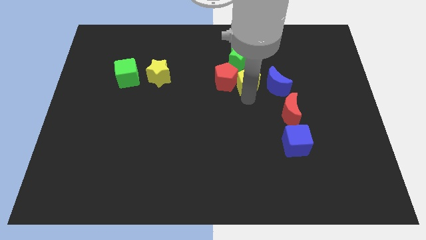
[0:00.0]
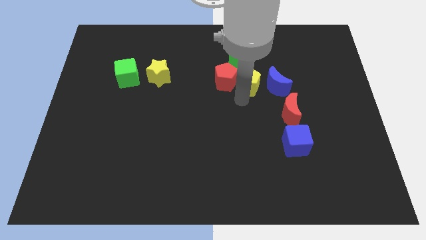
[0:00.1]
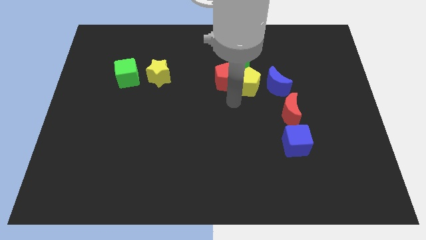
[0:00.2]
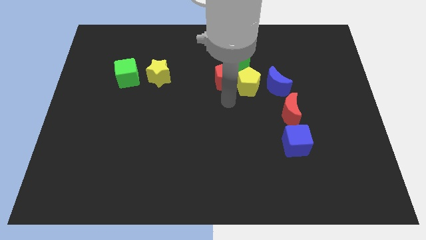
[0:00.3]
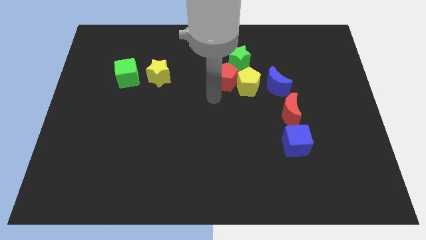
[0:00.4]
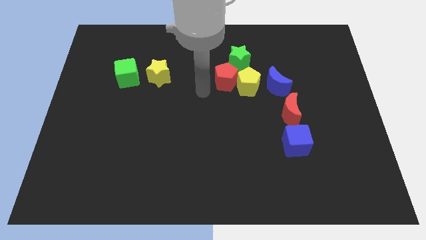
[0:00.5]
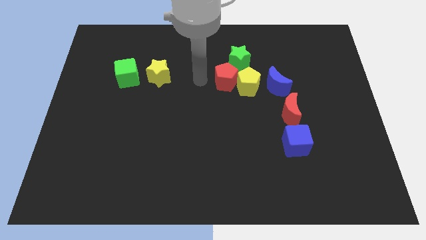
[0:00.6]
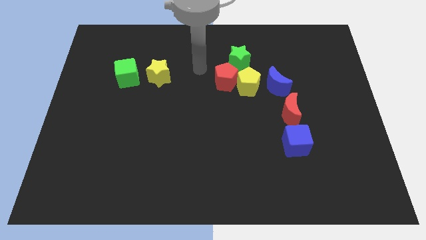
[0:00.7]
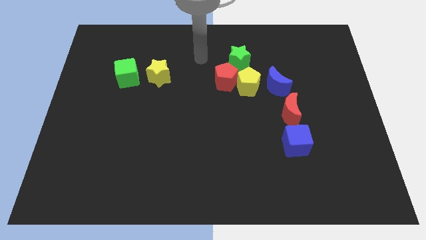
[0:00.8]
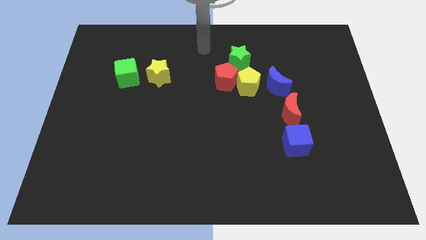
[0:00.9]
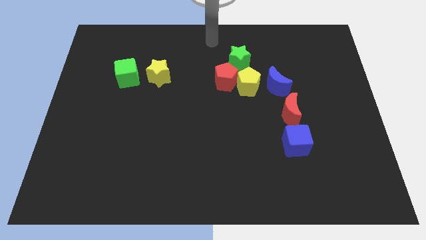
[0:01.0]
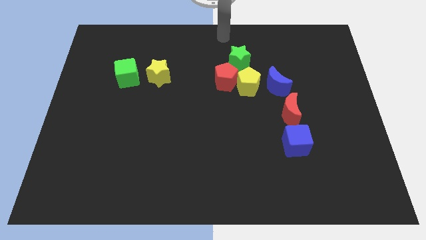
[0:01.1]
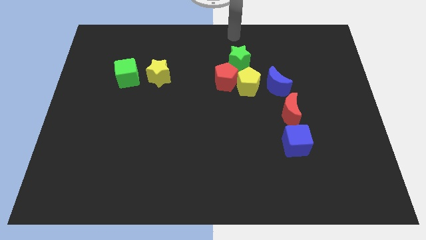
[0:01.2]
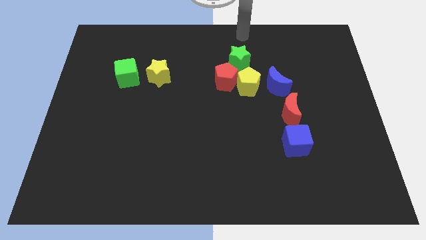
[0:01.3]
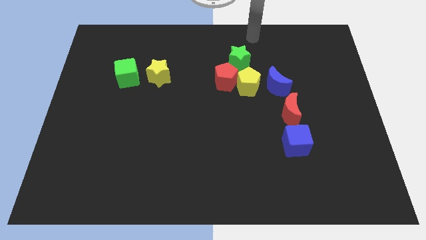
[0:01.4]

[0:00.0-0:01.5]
move the yellow pentagon and red penatgon close to green star

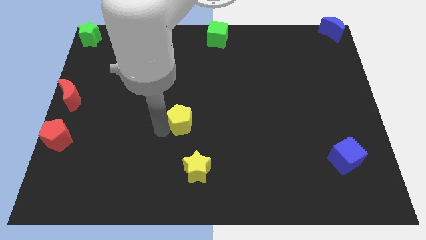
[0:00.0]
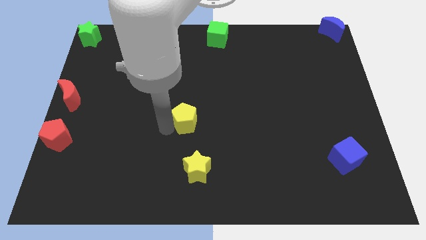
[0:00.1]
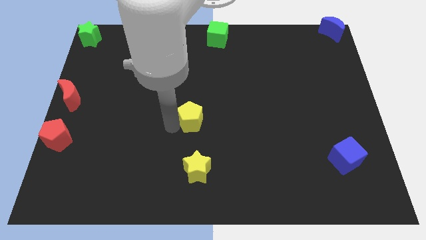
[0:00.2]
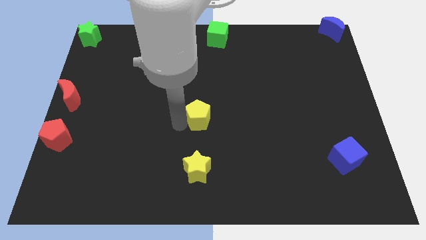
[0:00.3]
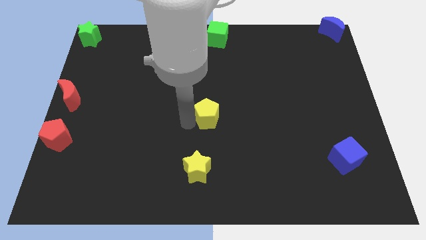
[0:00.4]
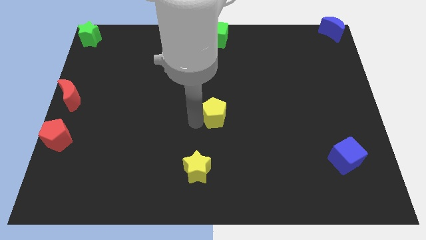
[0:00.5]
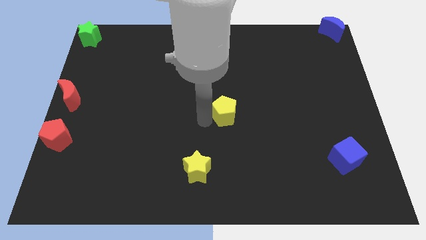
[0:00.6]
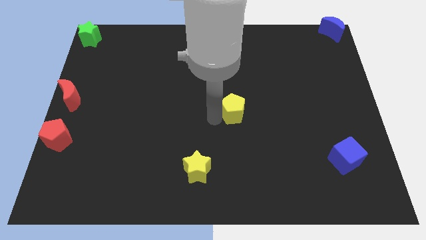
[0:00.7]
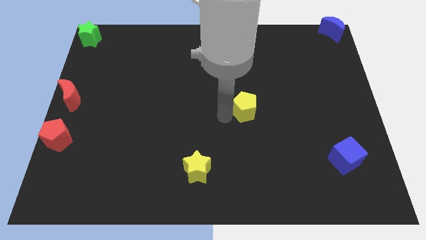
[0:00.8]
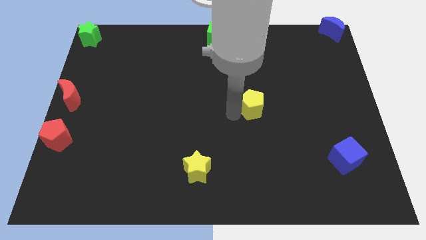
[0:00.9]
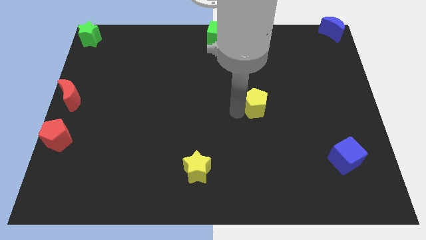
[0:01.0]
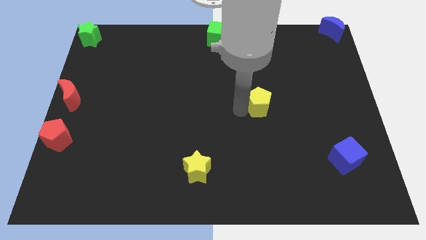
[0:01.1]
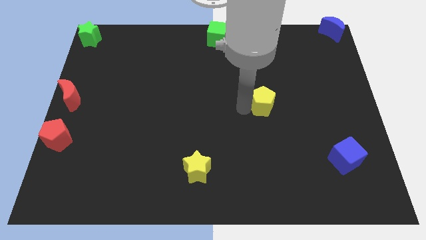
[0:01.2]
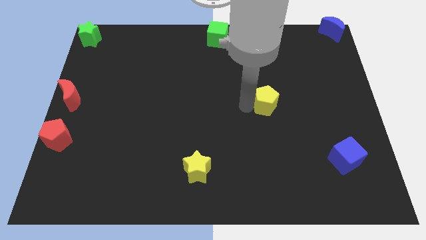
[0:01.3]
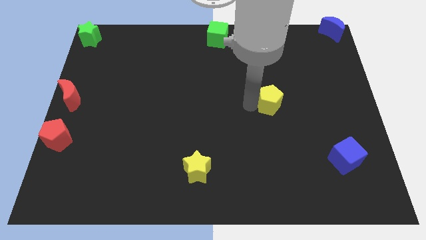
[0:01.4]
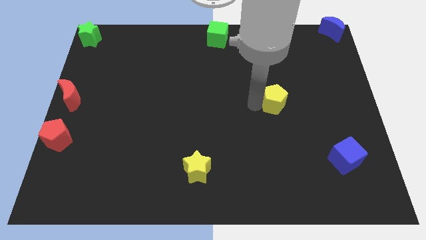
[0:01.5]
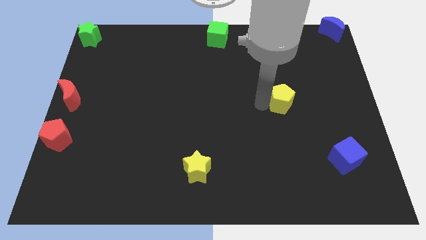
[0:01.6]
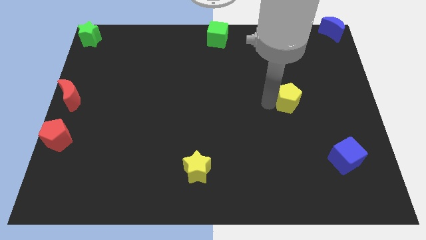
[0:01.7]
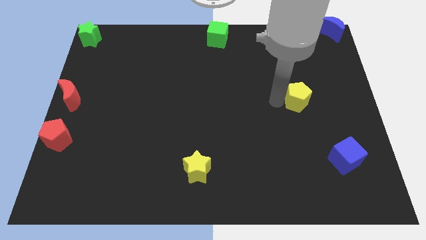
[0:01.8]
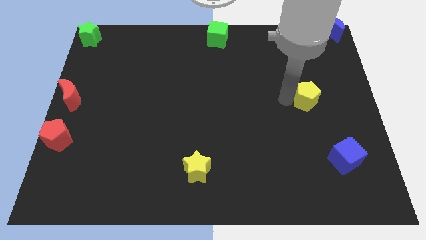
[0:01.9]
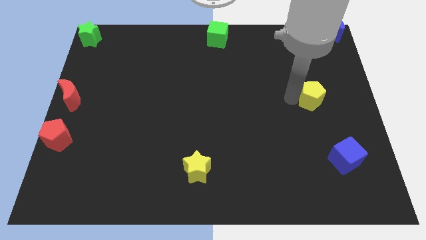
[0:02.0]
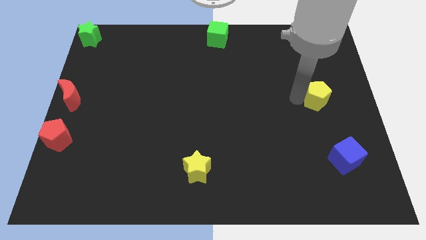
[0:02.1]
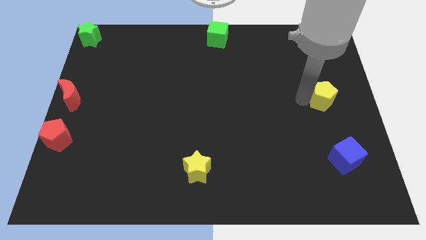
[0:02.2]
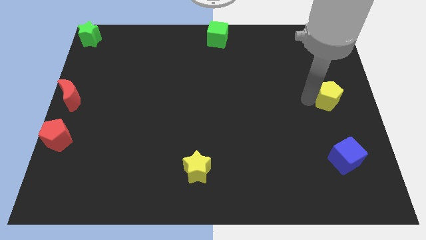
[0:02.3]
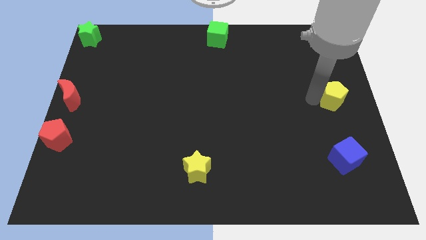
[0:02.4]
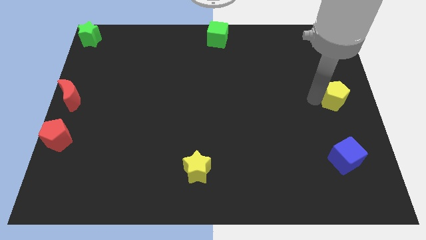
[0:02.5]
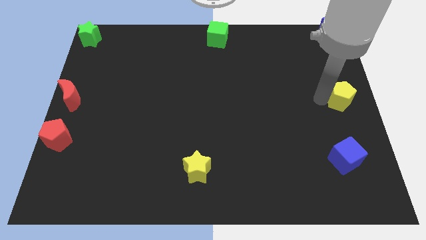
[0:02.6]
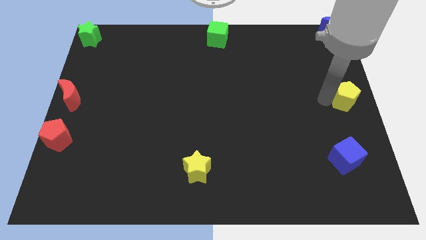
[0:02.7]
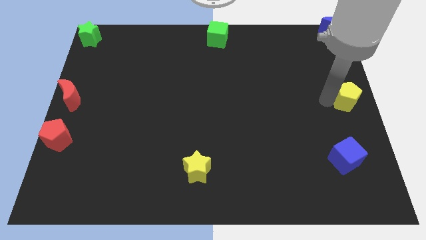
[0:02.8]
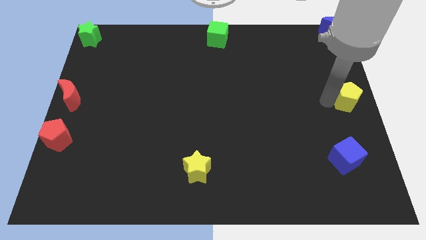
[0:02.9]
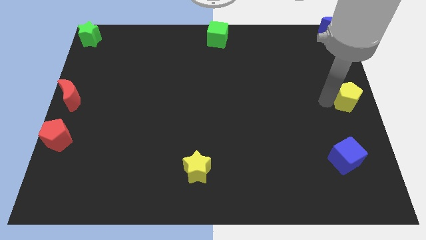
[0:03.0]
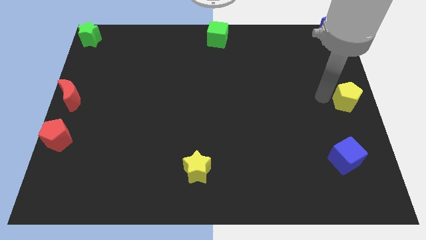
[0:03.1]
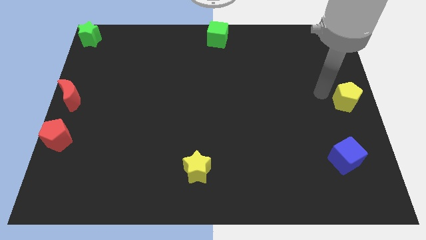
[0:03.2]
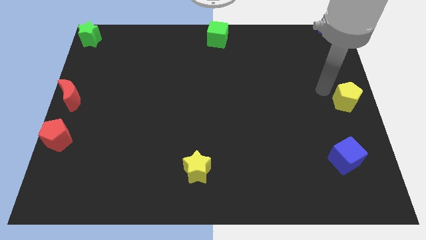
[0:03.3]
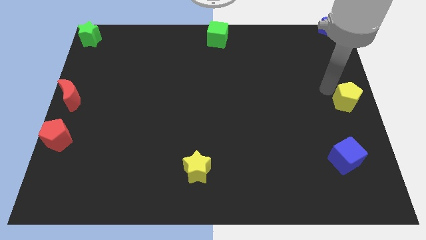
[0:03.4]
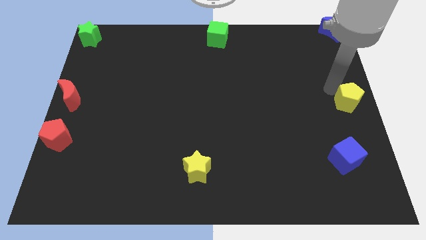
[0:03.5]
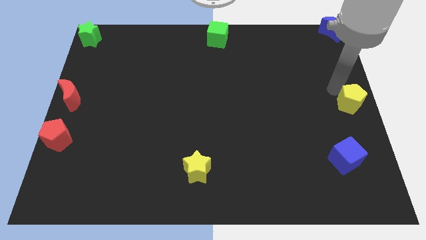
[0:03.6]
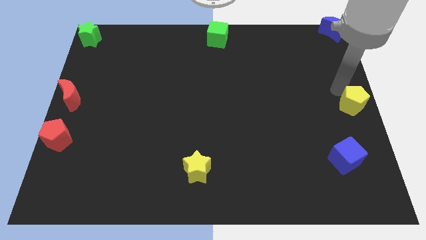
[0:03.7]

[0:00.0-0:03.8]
push the yellow pentagon towards the right side of the board

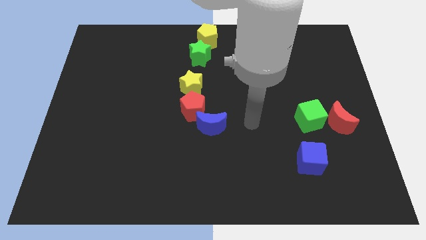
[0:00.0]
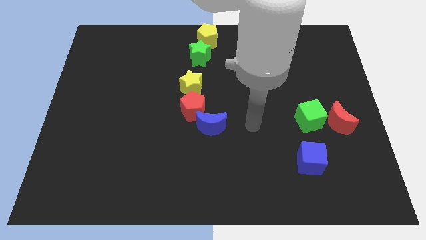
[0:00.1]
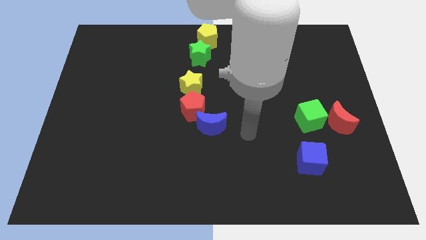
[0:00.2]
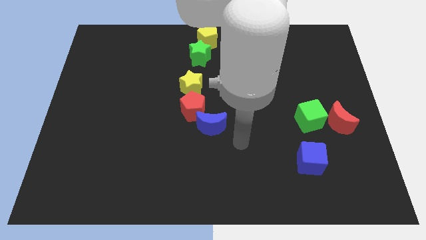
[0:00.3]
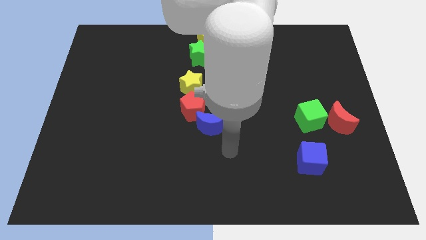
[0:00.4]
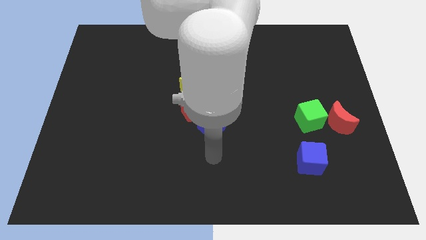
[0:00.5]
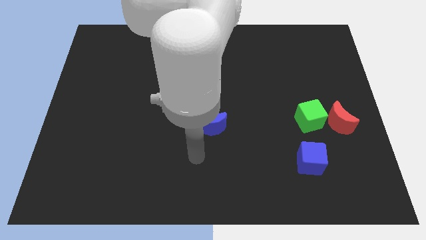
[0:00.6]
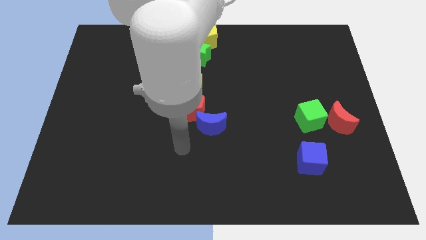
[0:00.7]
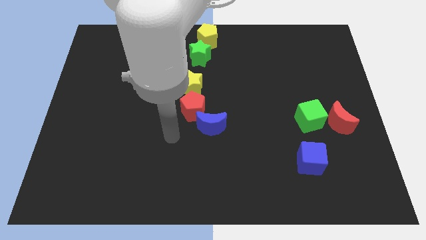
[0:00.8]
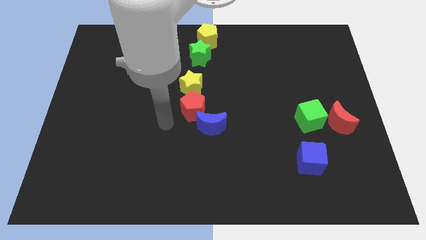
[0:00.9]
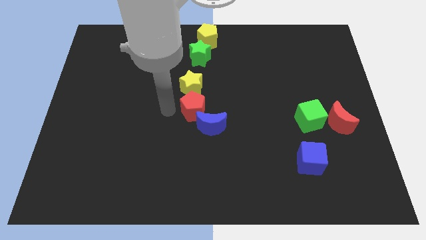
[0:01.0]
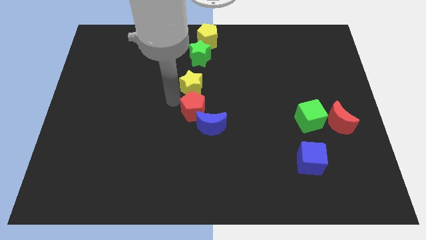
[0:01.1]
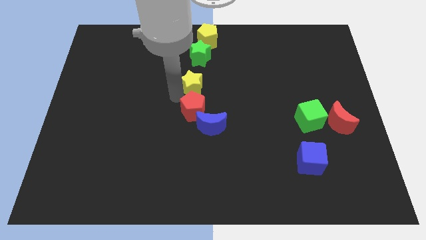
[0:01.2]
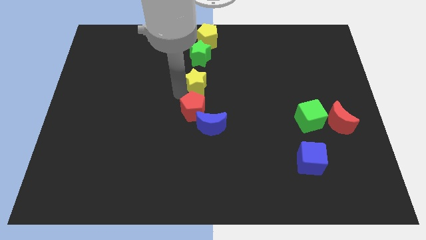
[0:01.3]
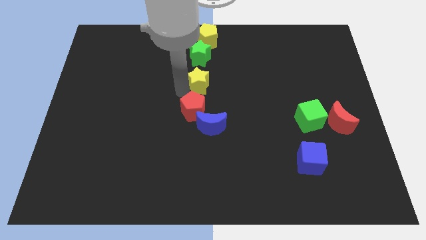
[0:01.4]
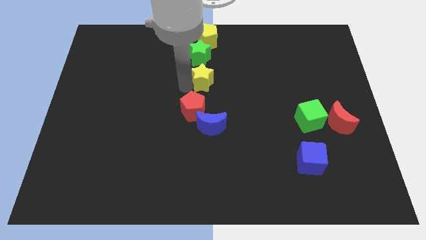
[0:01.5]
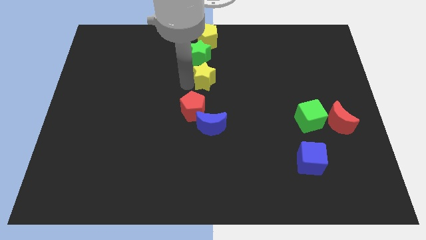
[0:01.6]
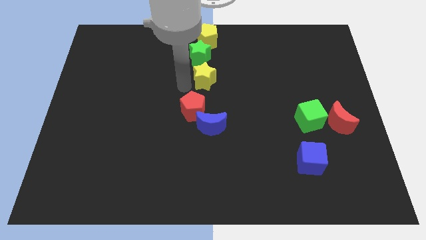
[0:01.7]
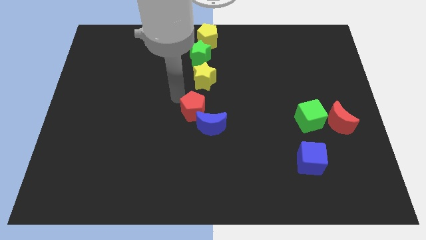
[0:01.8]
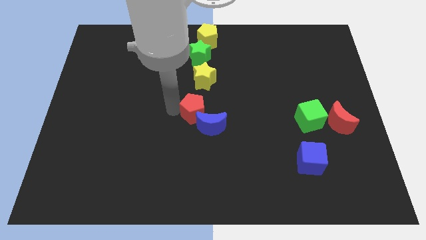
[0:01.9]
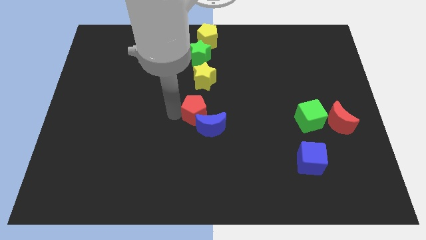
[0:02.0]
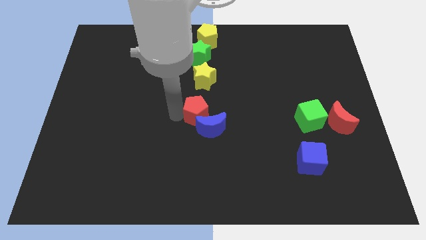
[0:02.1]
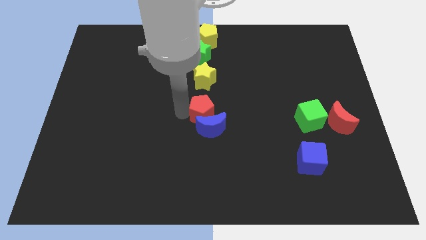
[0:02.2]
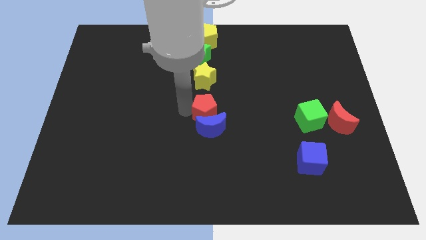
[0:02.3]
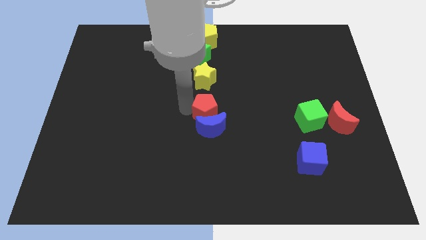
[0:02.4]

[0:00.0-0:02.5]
arrange the group of blocks in a line properly

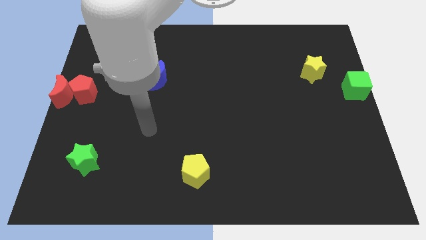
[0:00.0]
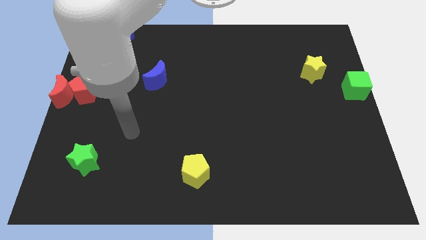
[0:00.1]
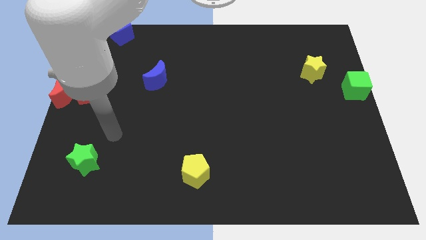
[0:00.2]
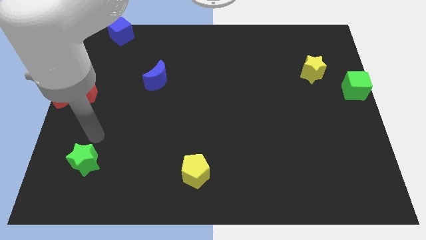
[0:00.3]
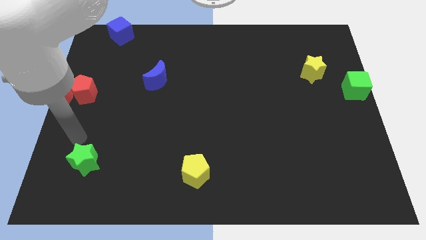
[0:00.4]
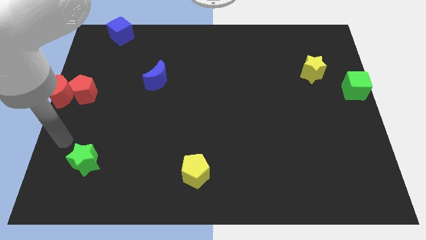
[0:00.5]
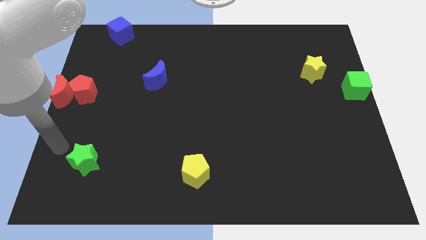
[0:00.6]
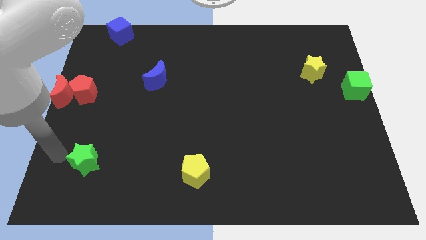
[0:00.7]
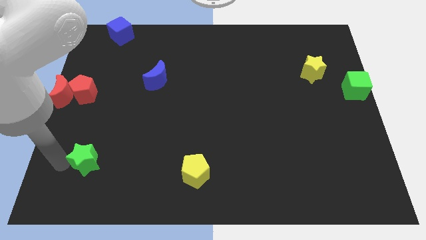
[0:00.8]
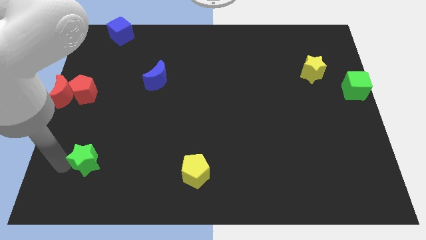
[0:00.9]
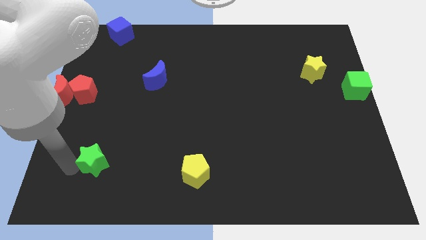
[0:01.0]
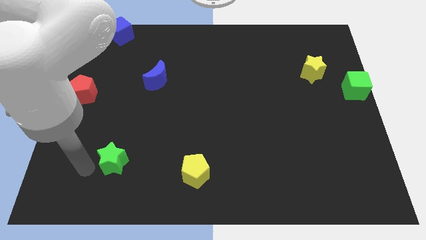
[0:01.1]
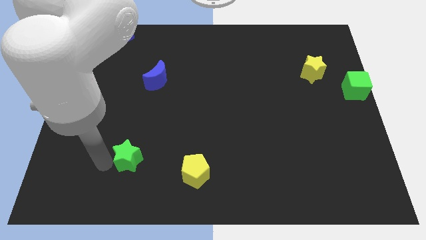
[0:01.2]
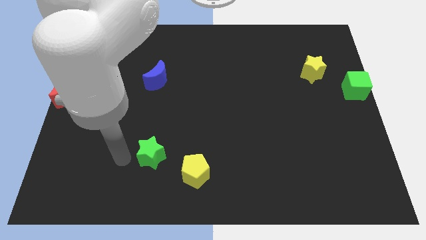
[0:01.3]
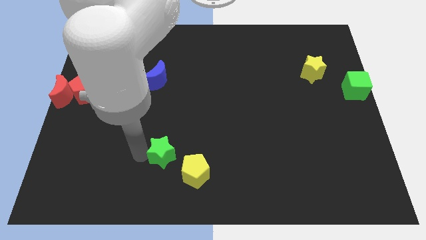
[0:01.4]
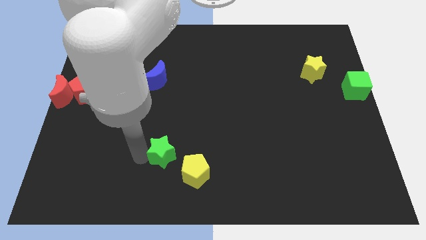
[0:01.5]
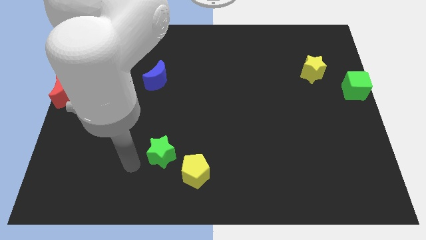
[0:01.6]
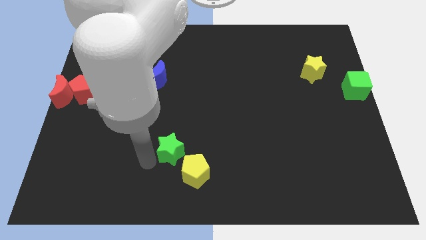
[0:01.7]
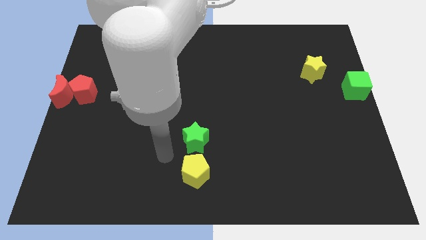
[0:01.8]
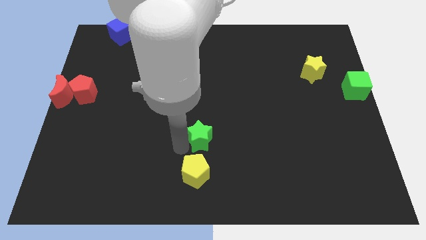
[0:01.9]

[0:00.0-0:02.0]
place the green star at the top of the yellow pentagon
